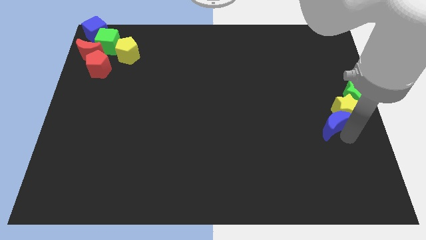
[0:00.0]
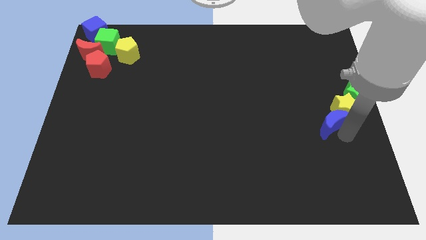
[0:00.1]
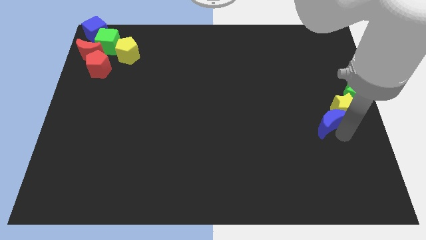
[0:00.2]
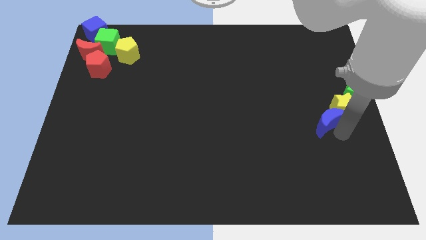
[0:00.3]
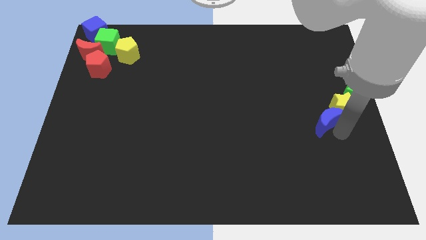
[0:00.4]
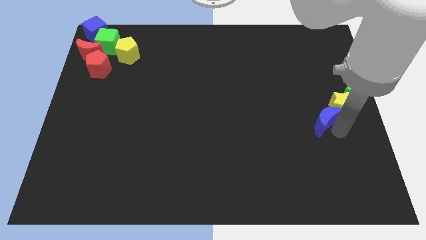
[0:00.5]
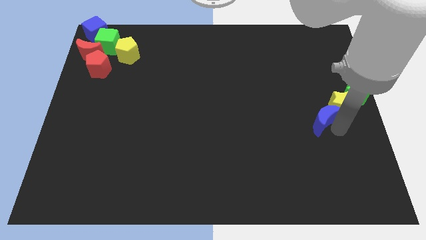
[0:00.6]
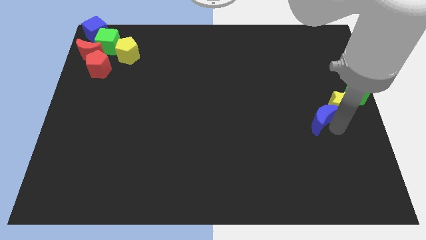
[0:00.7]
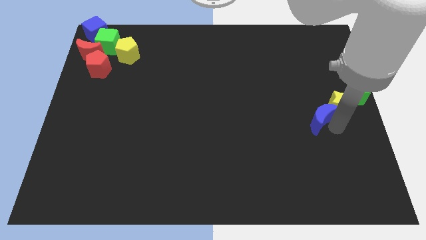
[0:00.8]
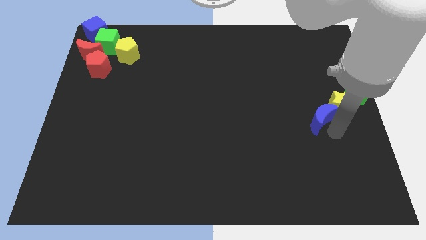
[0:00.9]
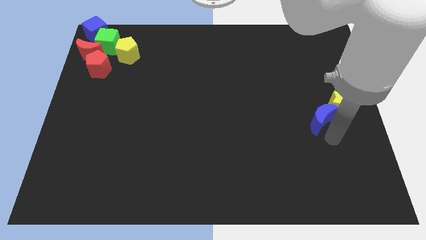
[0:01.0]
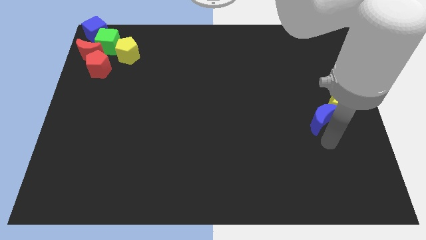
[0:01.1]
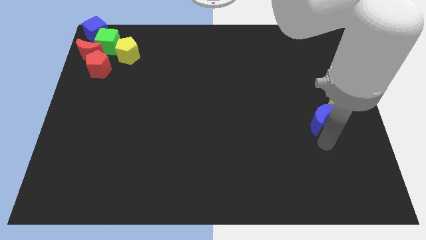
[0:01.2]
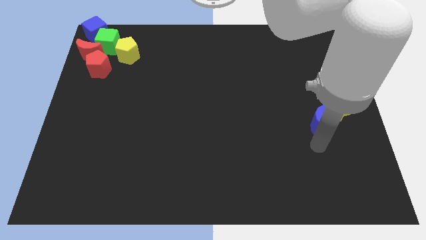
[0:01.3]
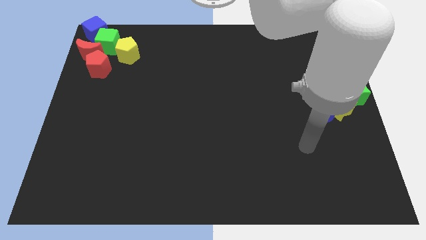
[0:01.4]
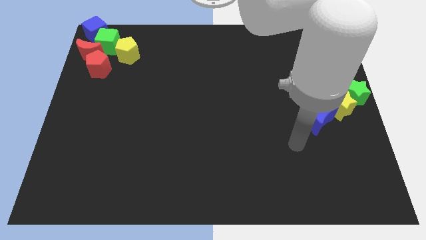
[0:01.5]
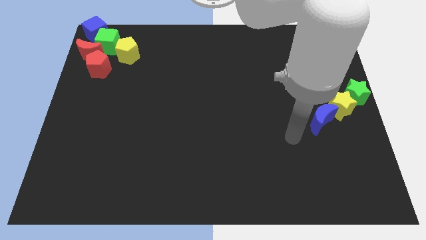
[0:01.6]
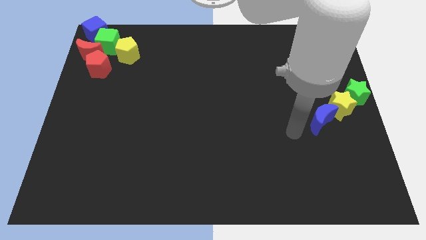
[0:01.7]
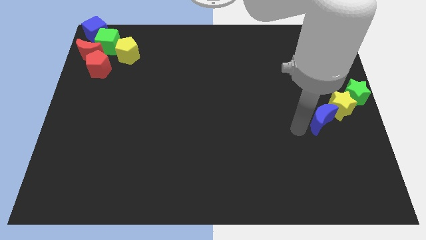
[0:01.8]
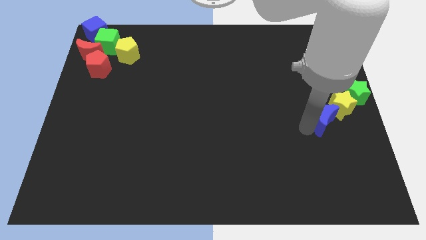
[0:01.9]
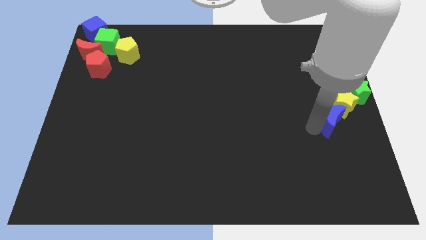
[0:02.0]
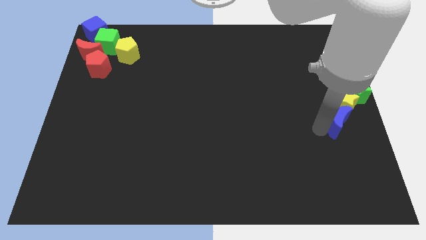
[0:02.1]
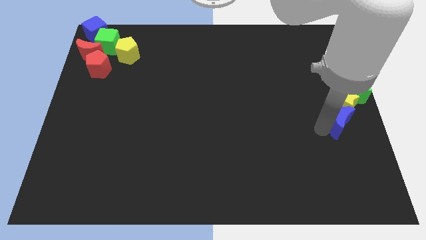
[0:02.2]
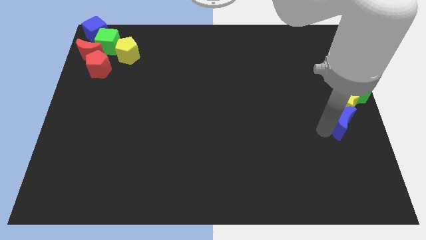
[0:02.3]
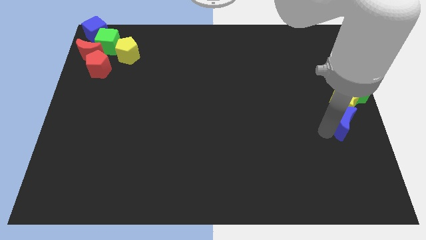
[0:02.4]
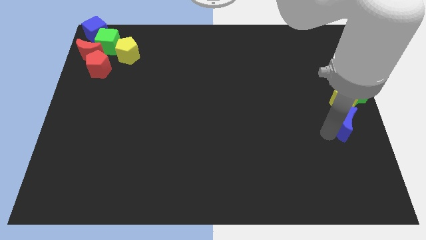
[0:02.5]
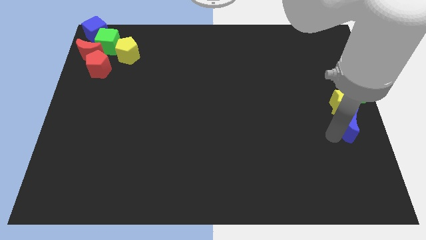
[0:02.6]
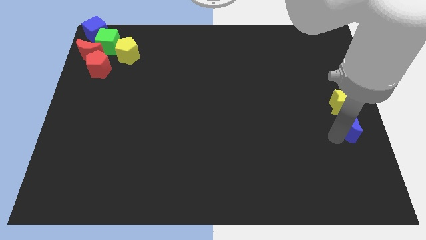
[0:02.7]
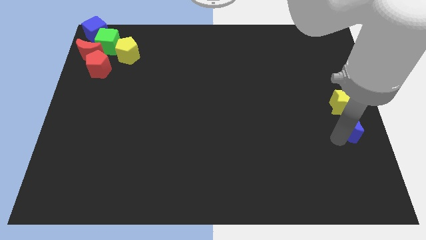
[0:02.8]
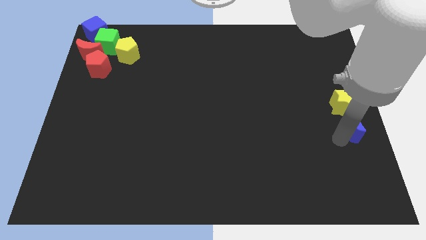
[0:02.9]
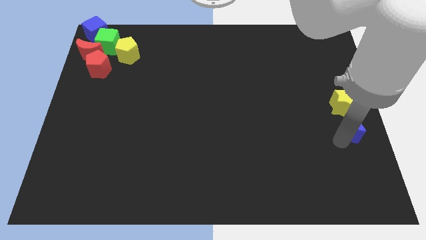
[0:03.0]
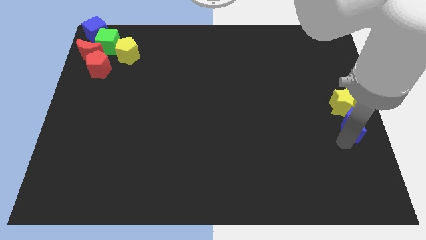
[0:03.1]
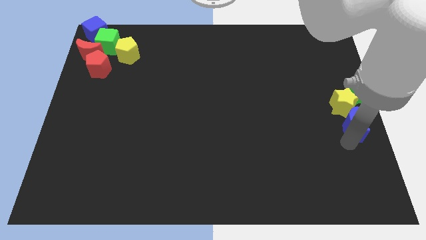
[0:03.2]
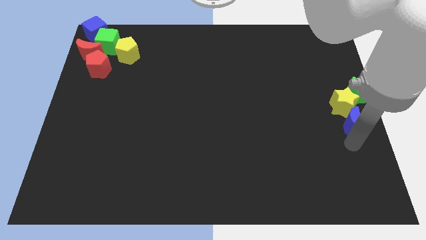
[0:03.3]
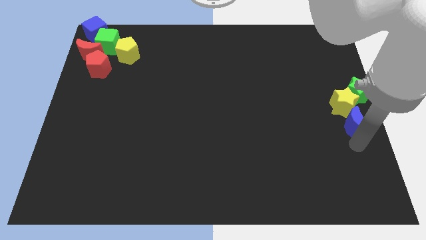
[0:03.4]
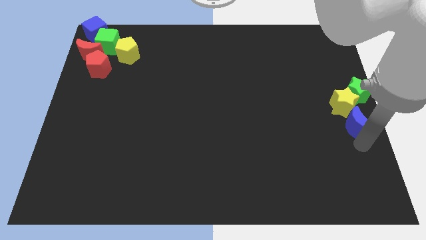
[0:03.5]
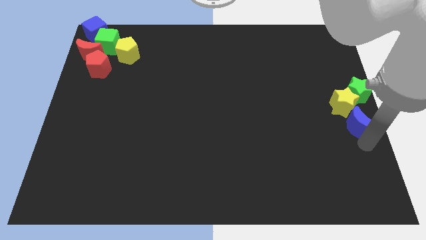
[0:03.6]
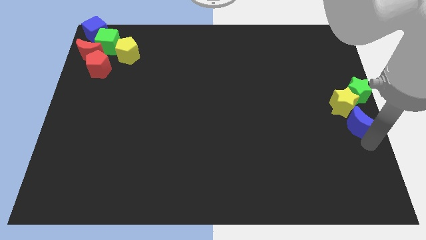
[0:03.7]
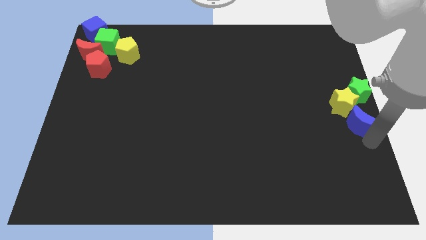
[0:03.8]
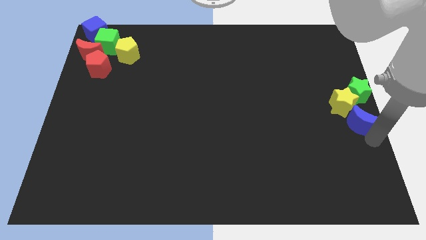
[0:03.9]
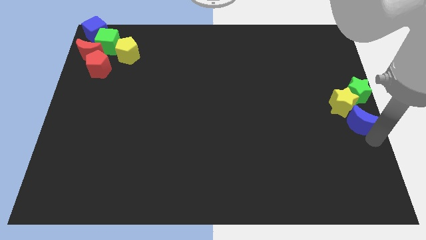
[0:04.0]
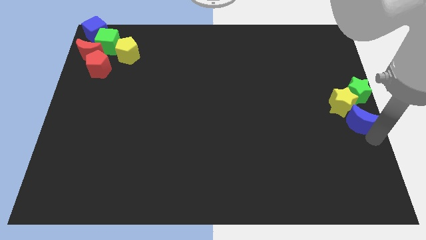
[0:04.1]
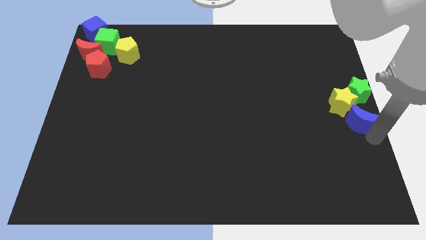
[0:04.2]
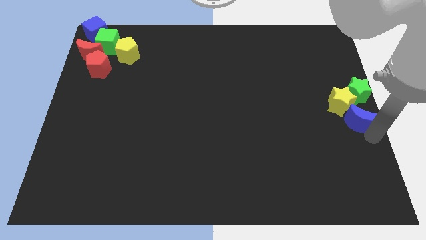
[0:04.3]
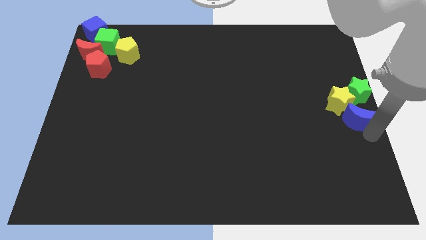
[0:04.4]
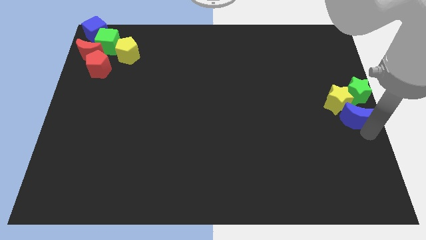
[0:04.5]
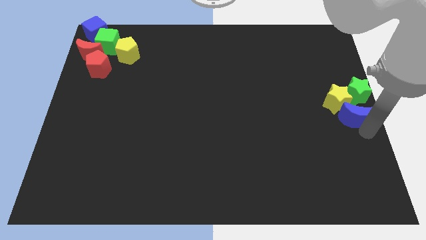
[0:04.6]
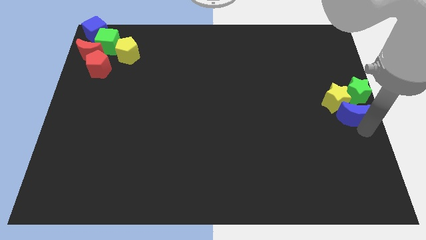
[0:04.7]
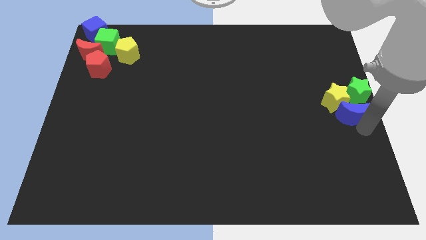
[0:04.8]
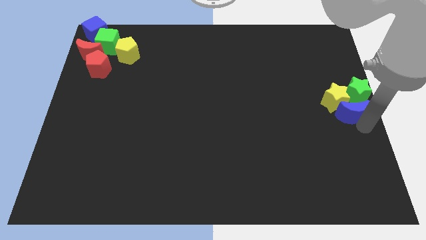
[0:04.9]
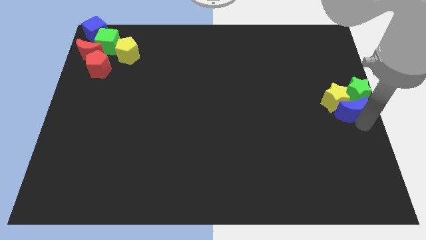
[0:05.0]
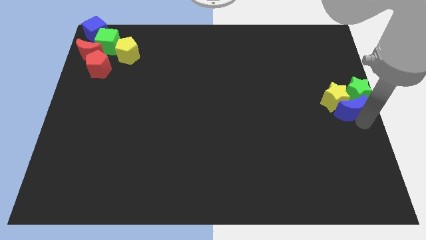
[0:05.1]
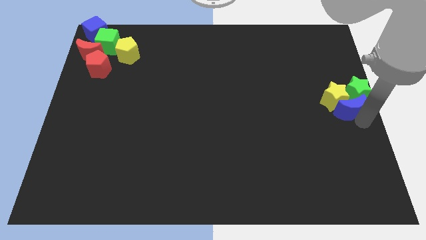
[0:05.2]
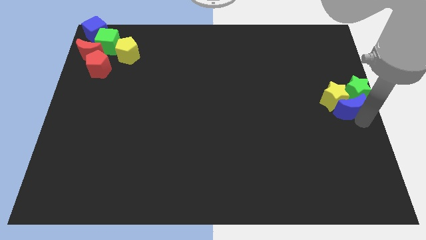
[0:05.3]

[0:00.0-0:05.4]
group up the blue crescent with the other two stars at the center right of the board

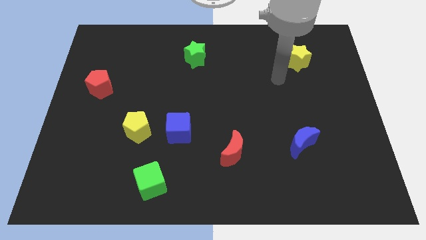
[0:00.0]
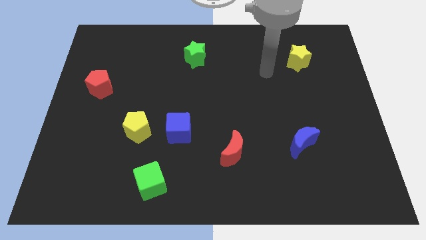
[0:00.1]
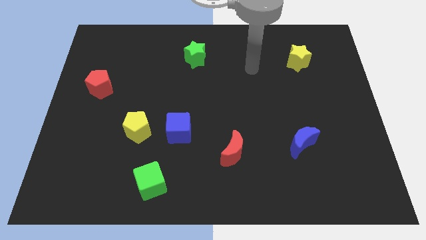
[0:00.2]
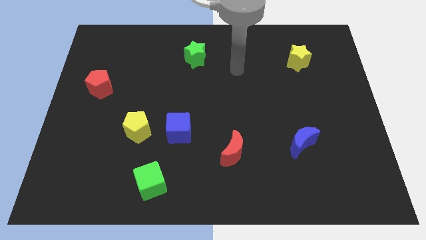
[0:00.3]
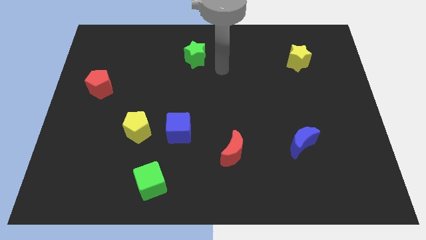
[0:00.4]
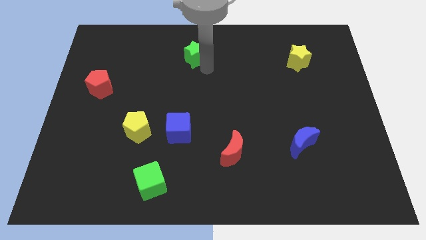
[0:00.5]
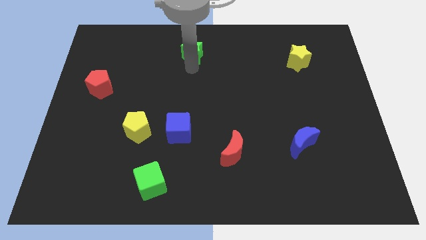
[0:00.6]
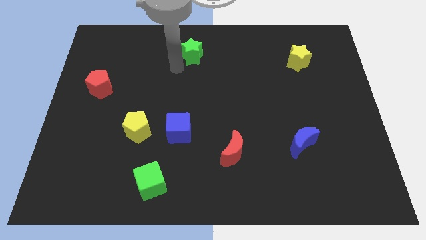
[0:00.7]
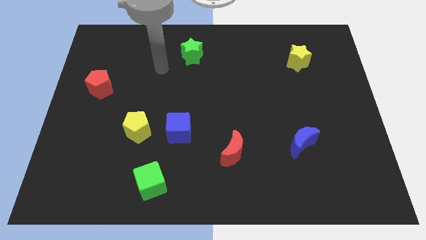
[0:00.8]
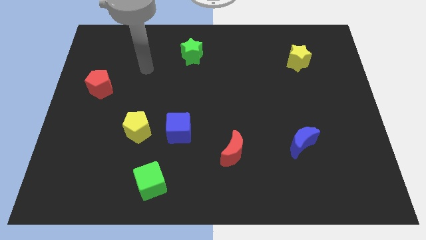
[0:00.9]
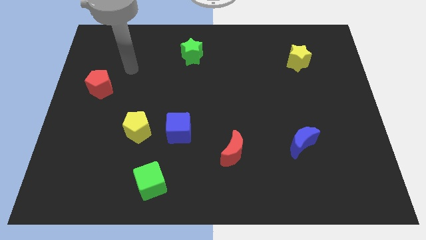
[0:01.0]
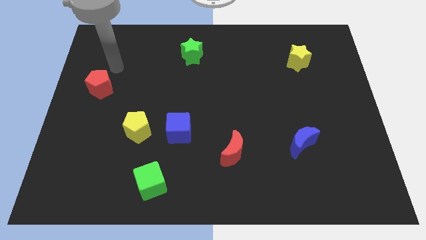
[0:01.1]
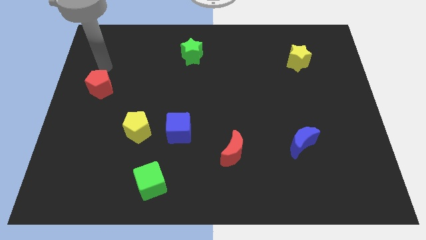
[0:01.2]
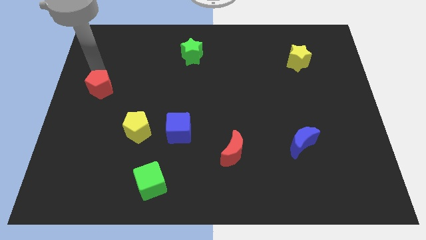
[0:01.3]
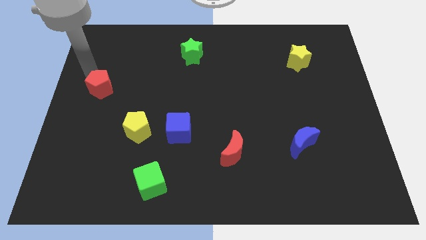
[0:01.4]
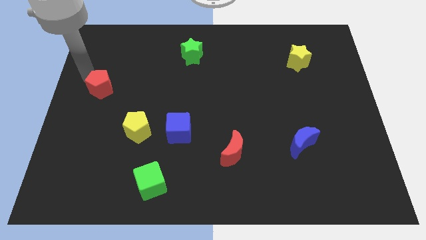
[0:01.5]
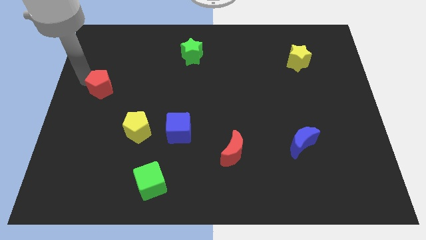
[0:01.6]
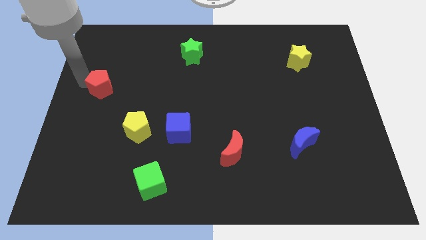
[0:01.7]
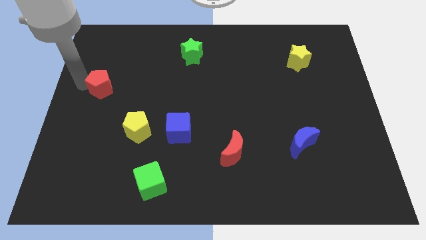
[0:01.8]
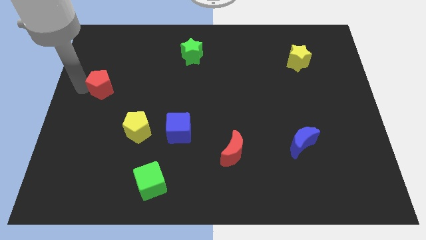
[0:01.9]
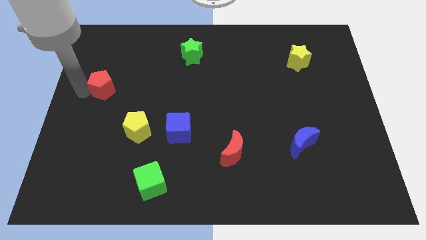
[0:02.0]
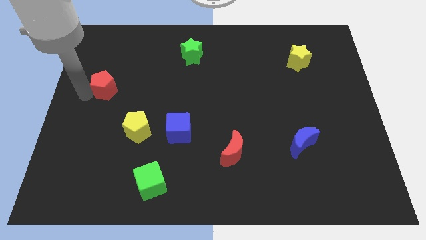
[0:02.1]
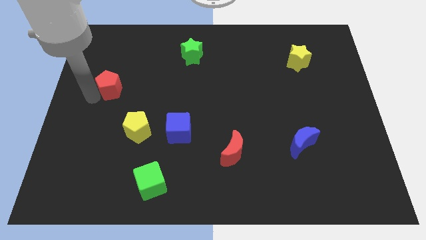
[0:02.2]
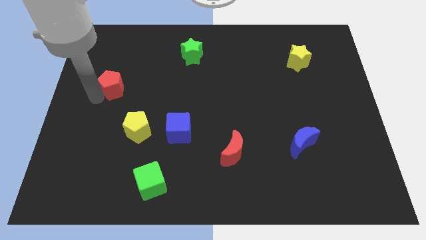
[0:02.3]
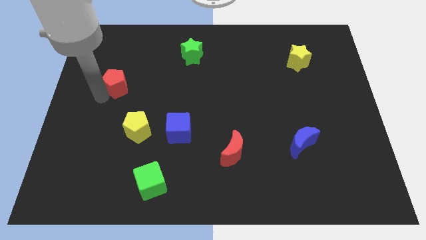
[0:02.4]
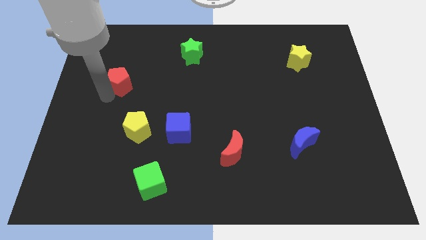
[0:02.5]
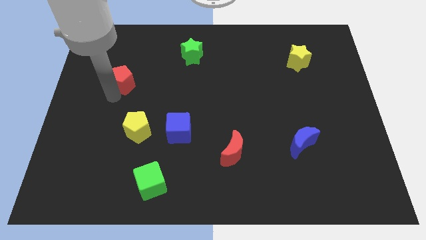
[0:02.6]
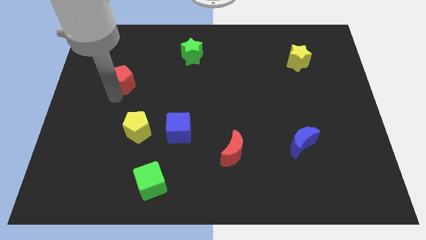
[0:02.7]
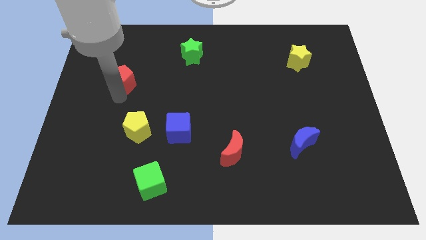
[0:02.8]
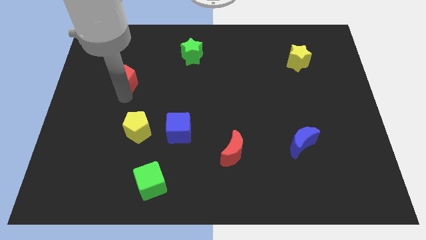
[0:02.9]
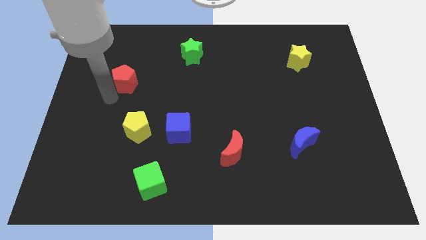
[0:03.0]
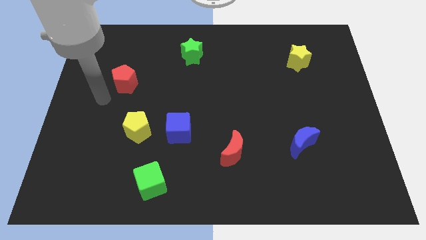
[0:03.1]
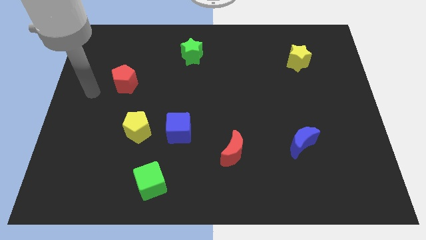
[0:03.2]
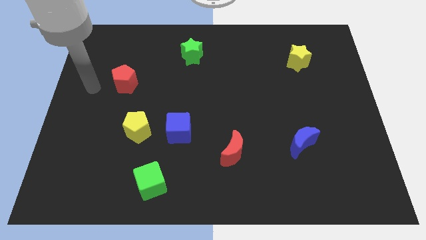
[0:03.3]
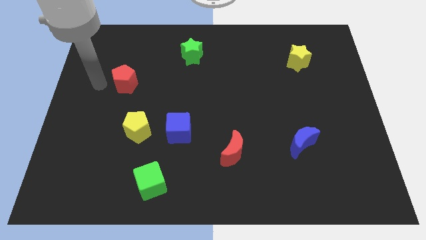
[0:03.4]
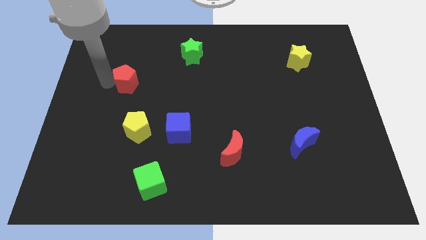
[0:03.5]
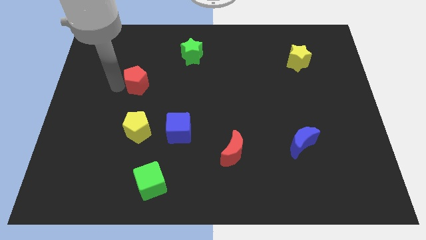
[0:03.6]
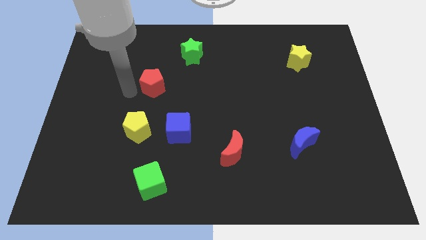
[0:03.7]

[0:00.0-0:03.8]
place the red pentagon diagonally top right to yellow pentagon
